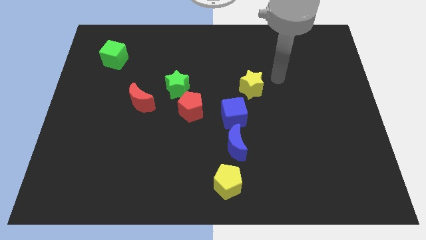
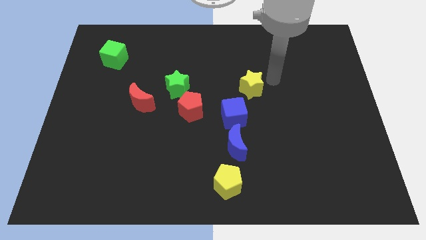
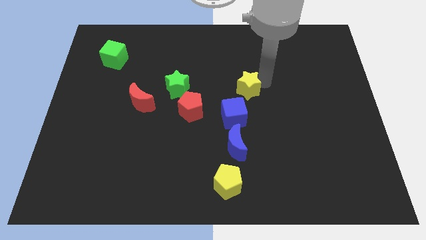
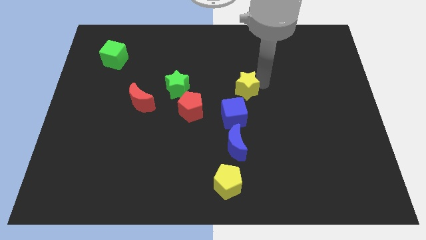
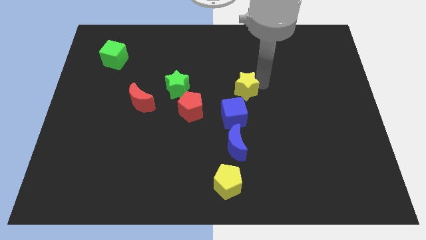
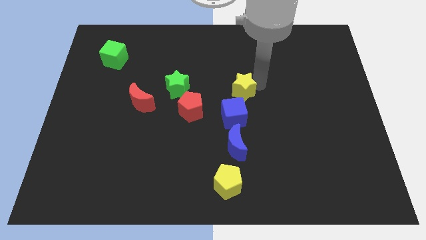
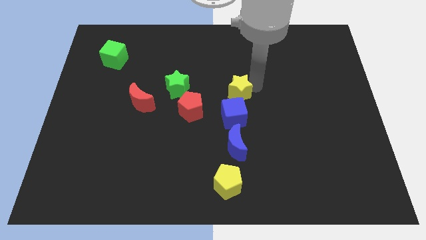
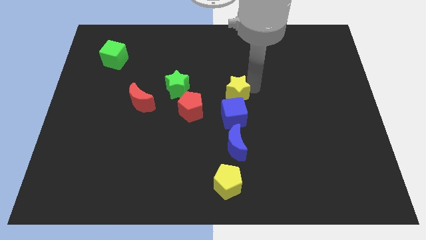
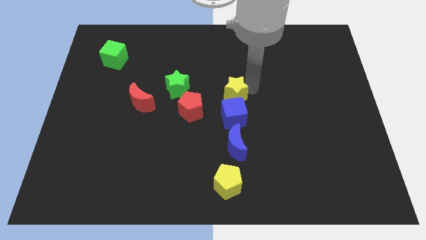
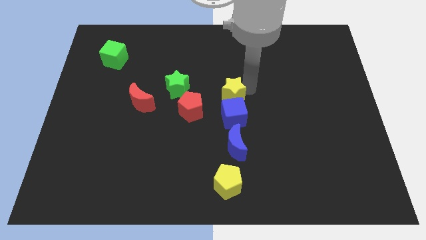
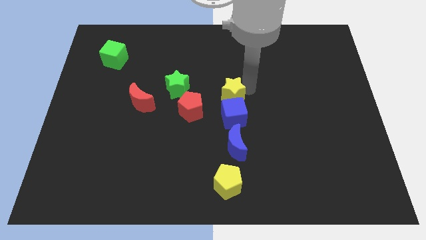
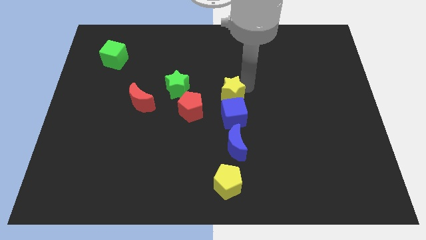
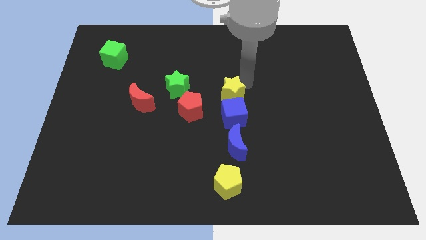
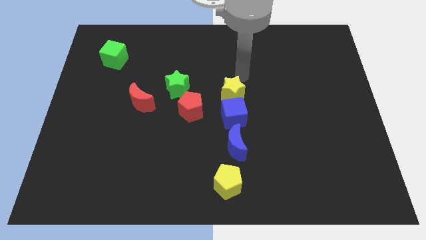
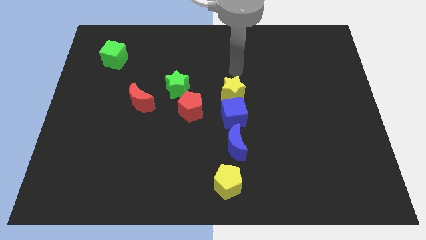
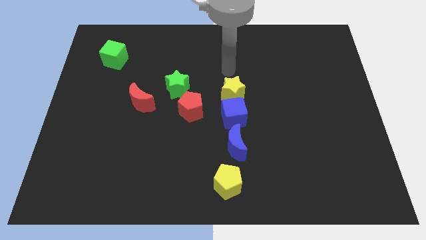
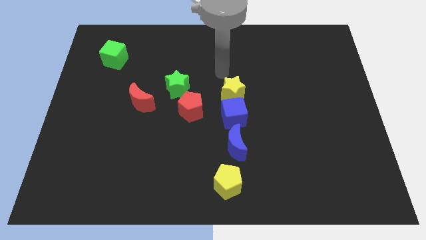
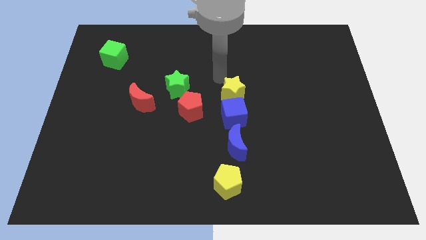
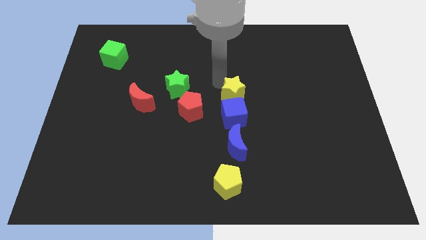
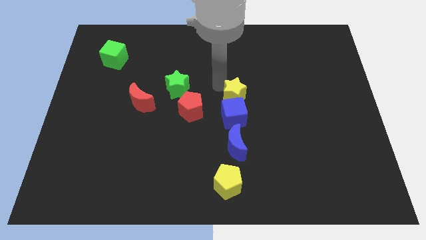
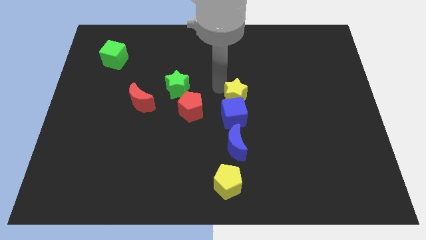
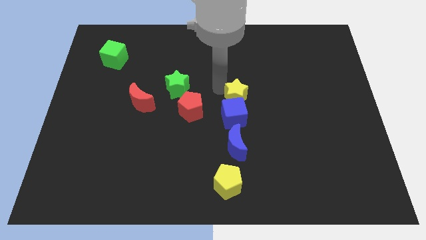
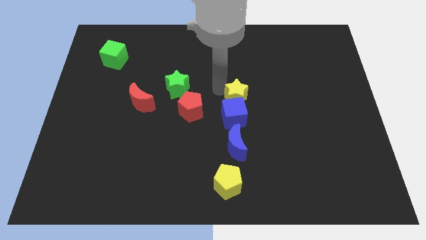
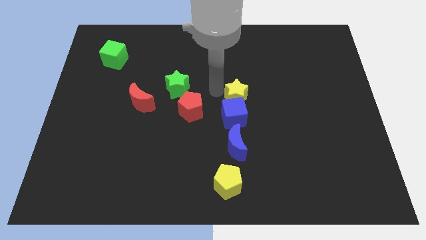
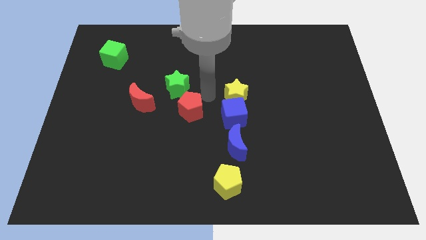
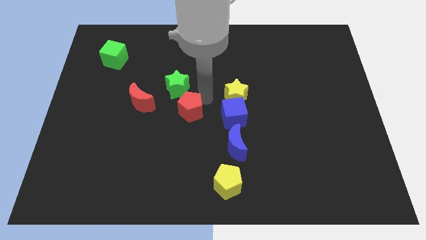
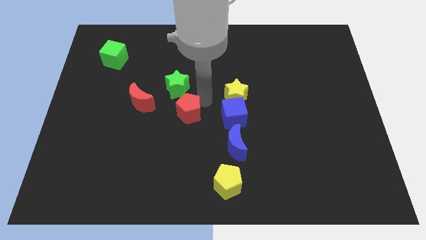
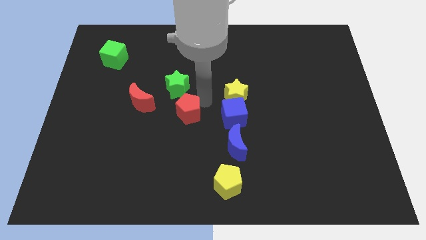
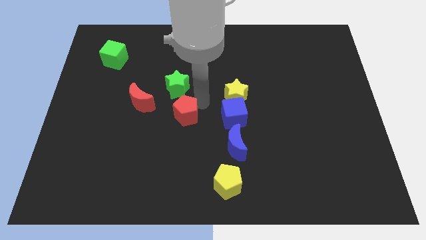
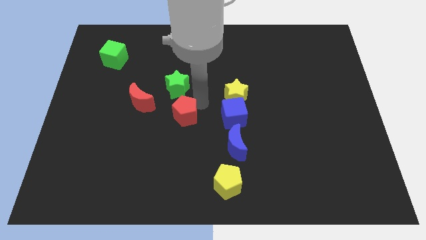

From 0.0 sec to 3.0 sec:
slide the yellow star above the blue cube

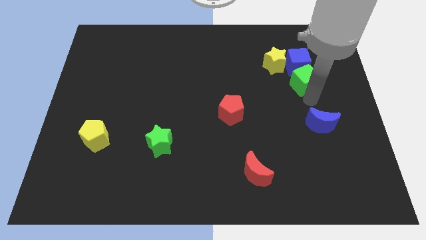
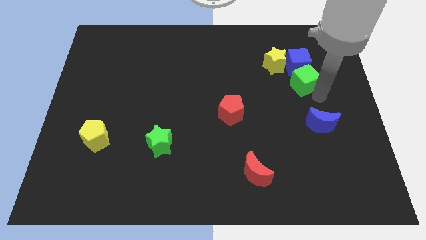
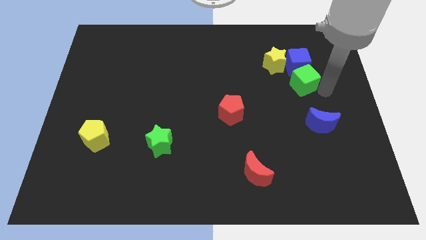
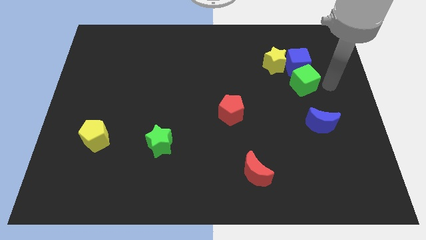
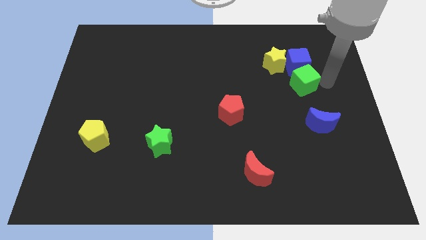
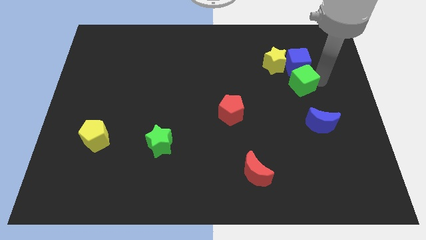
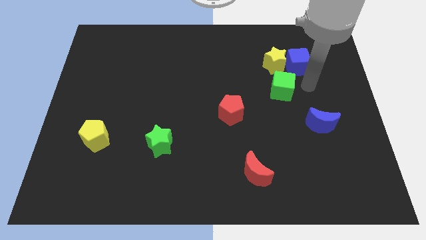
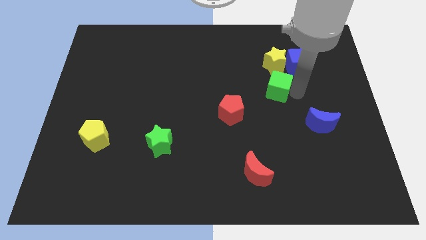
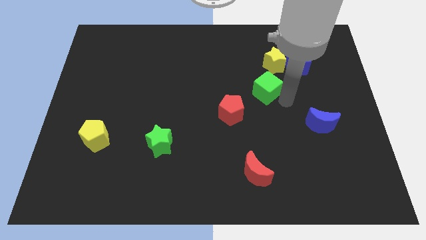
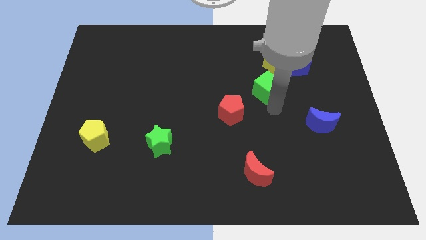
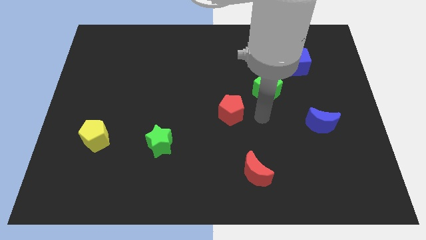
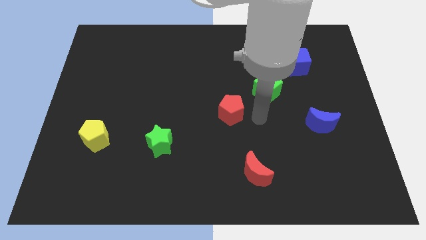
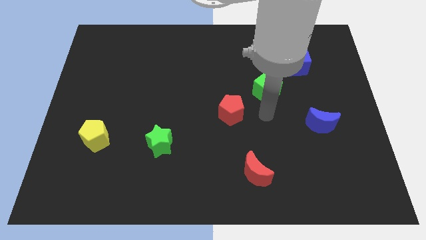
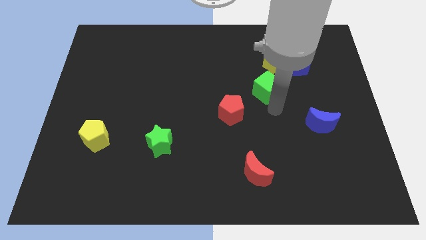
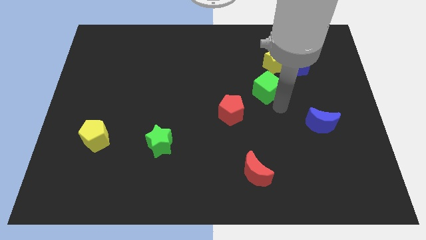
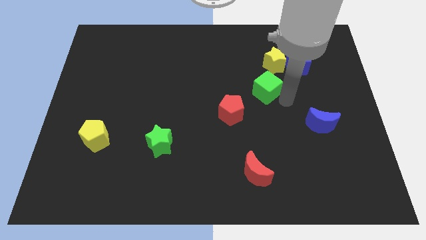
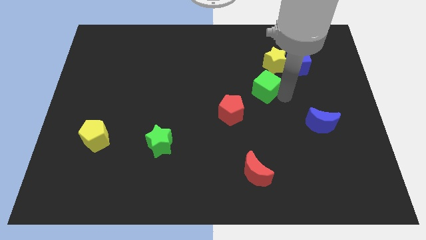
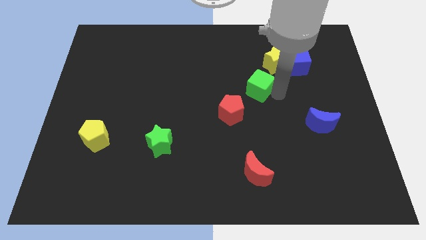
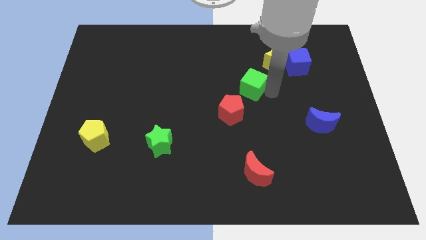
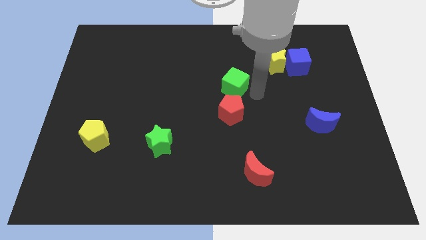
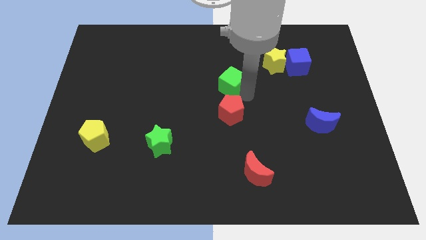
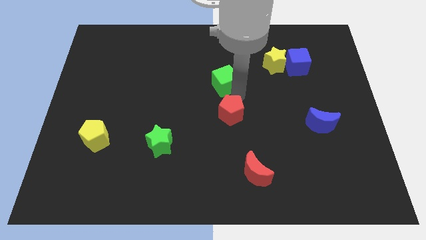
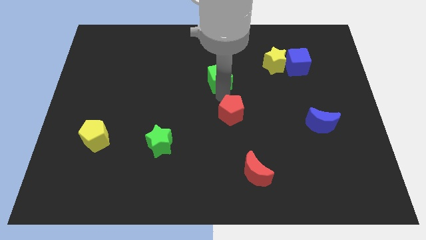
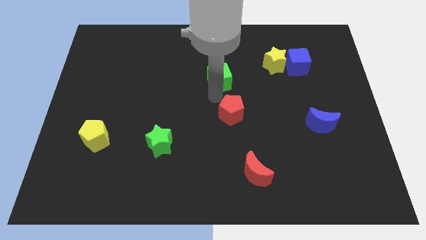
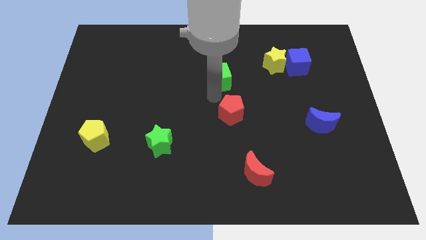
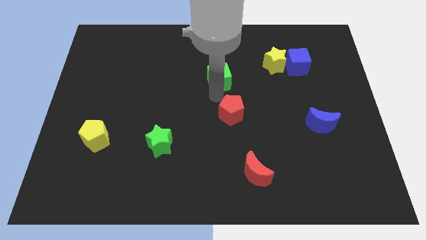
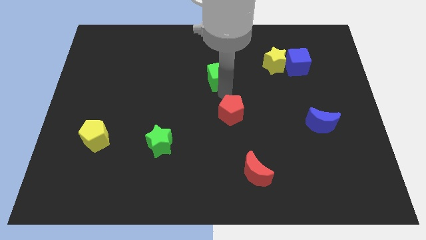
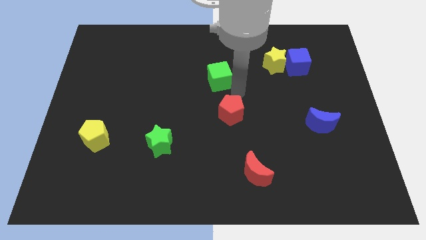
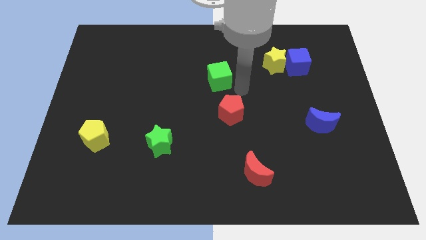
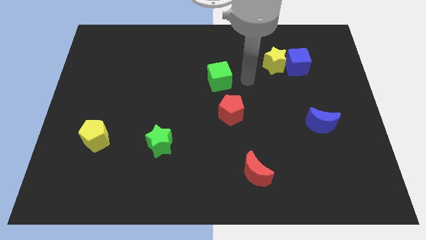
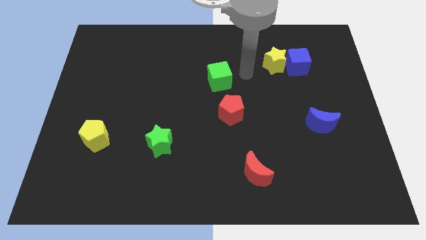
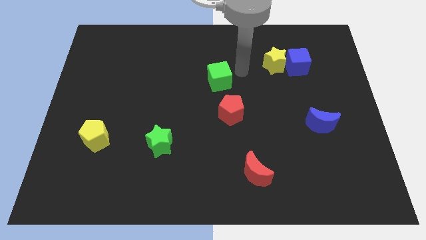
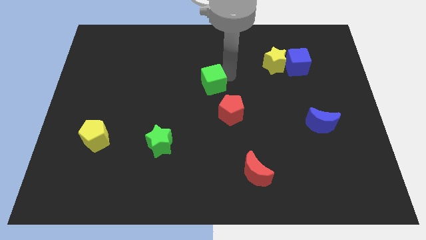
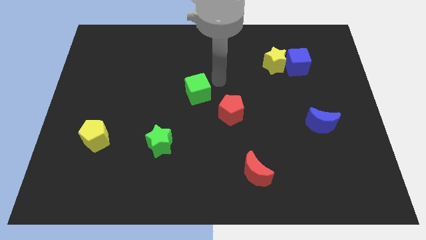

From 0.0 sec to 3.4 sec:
place the green cube above the red pentagon

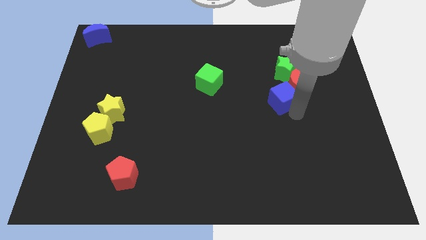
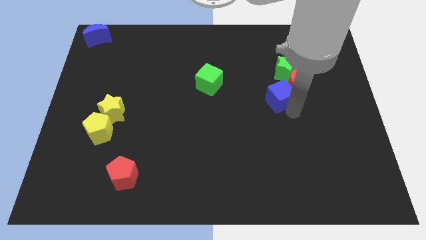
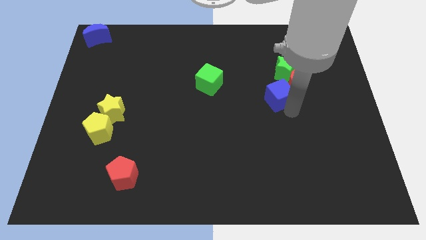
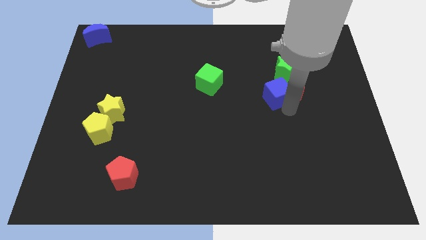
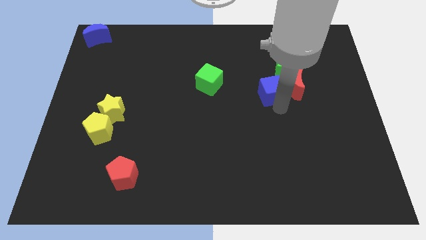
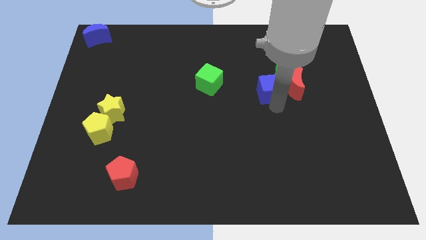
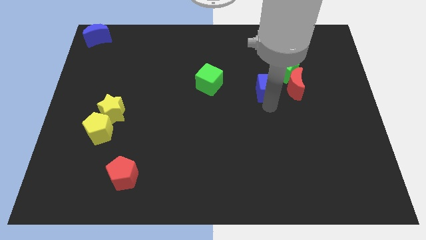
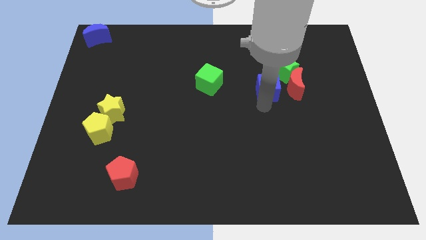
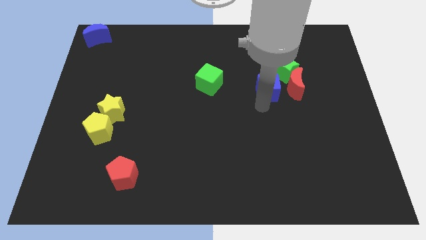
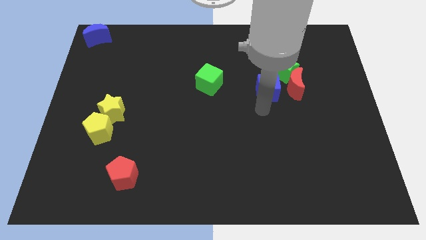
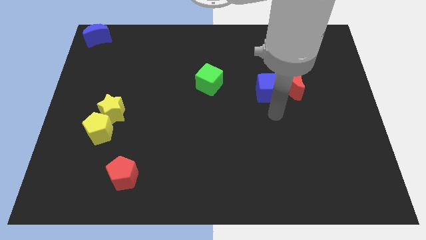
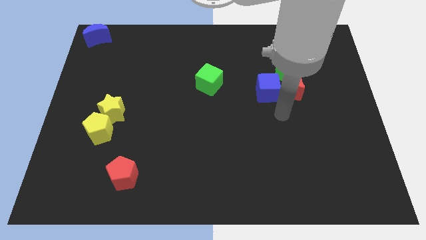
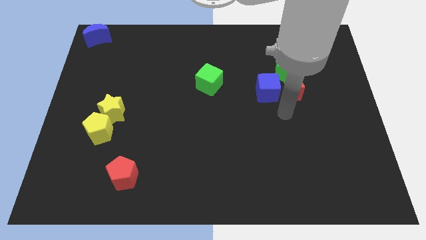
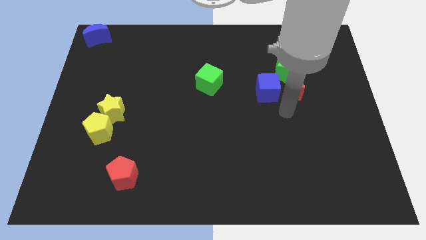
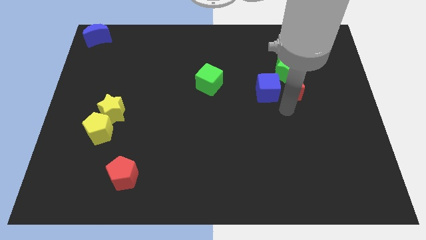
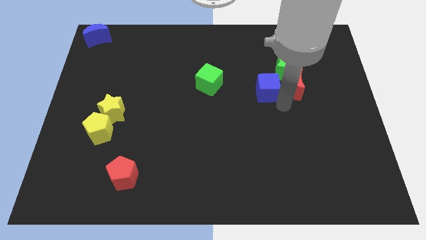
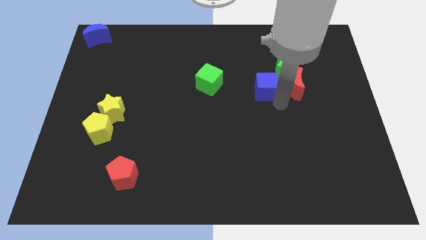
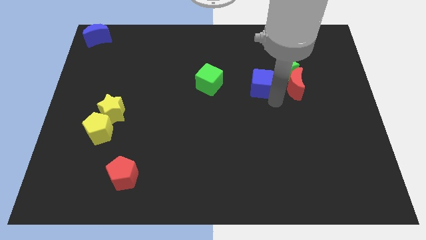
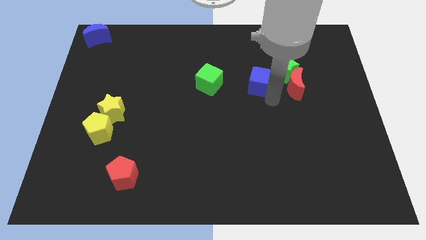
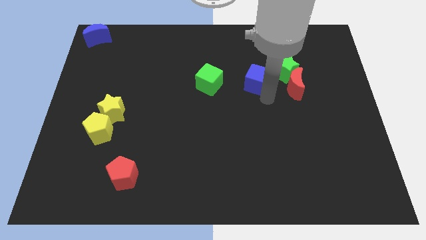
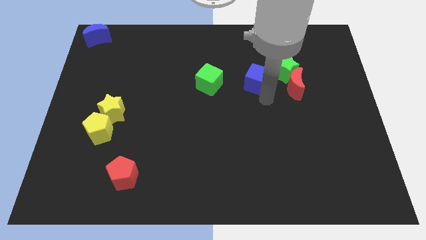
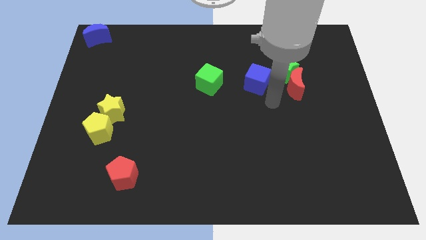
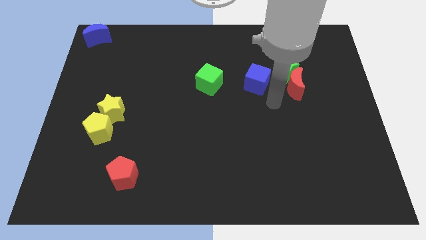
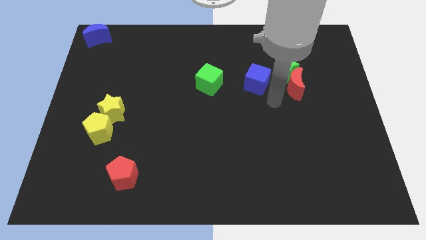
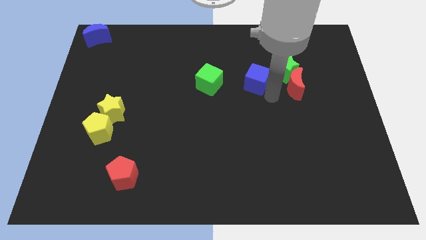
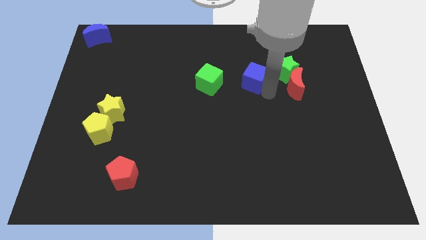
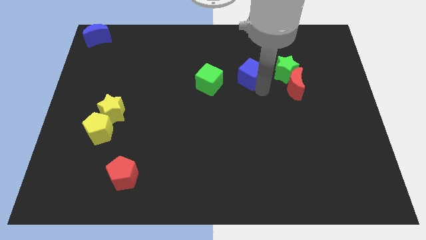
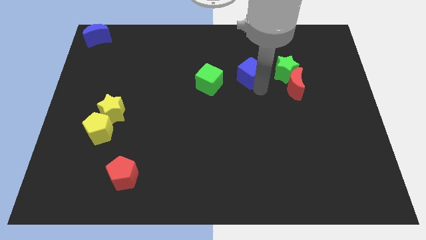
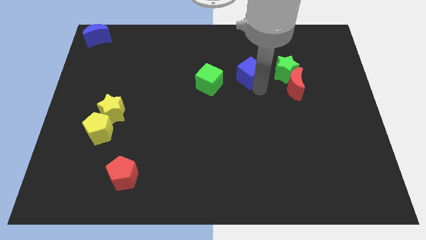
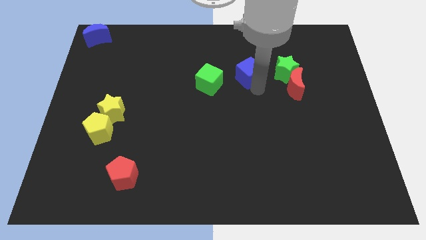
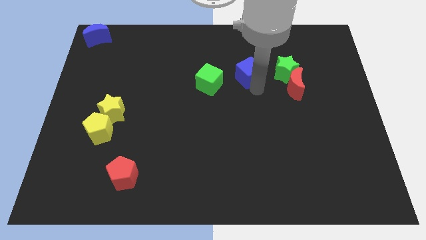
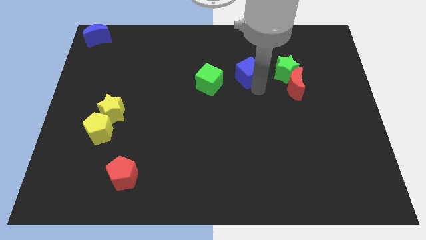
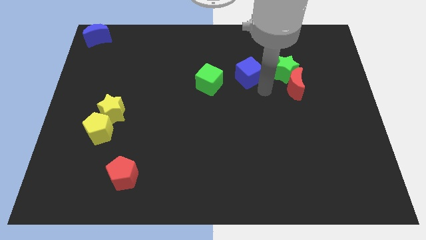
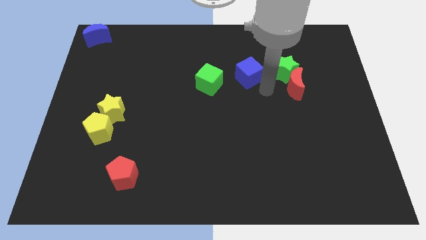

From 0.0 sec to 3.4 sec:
push the blue cube between green star and green cube
